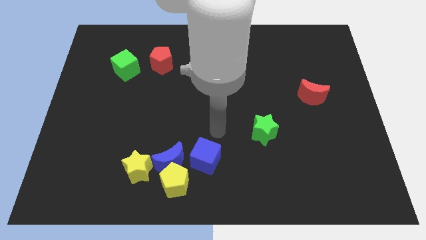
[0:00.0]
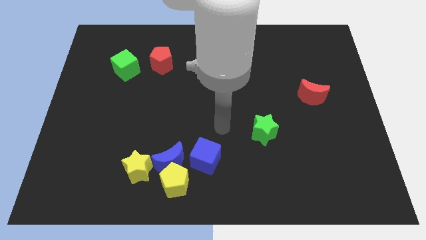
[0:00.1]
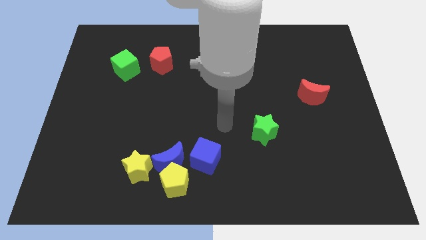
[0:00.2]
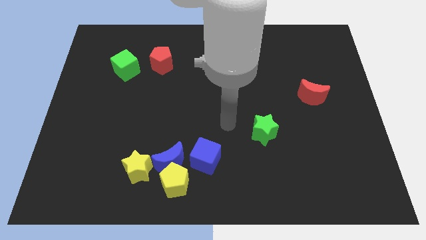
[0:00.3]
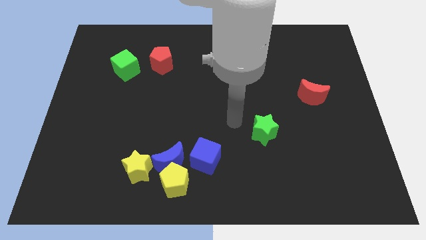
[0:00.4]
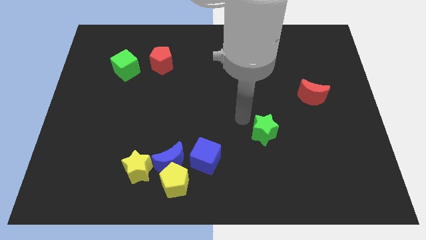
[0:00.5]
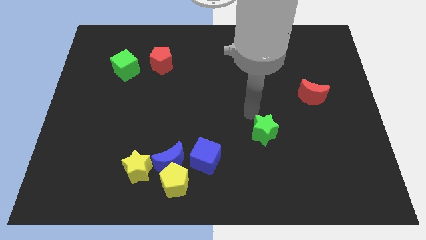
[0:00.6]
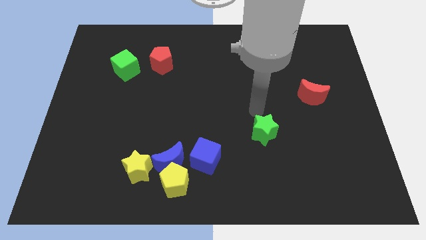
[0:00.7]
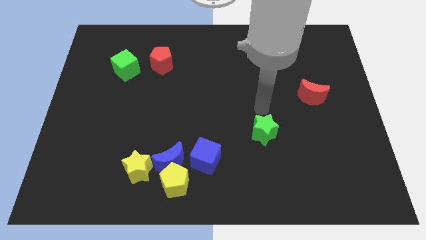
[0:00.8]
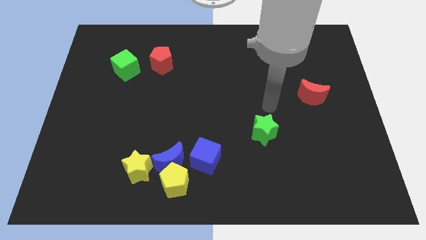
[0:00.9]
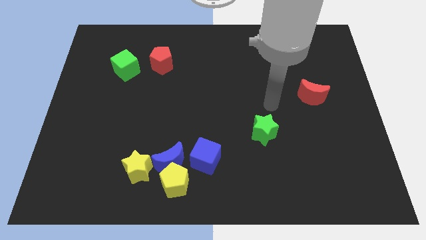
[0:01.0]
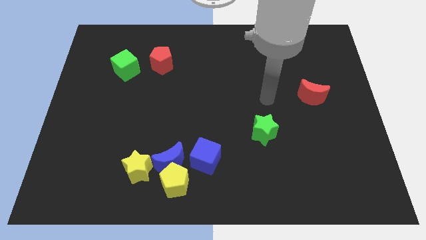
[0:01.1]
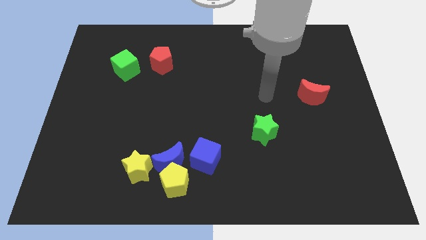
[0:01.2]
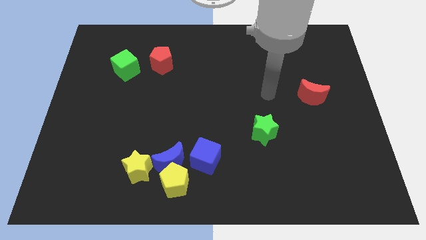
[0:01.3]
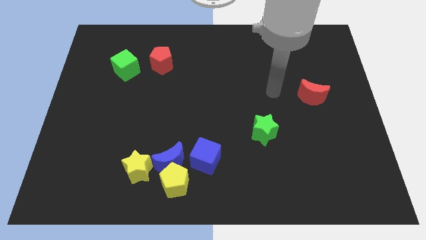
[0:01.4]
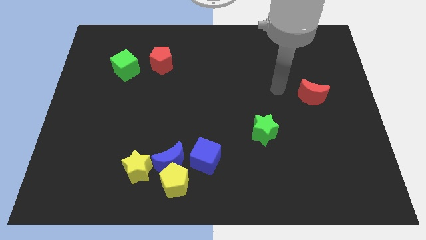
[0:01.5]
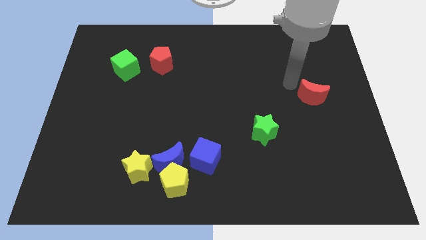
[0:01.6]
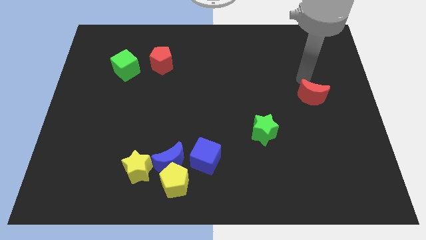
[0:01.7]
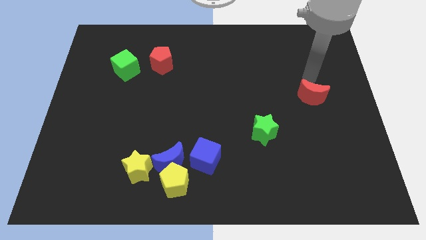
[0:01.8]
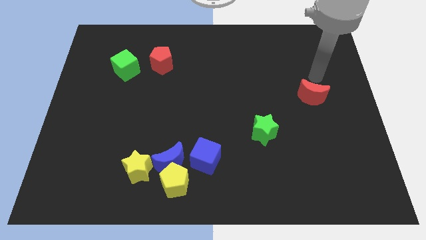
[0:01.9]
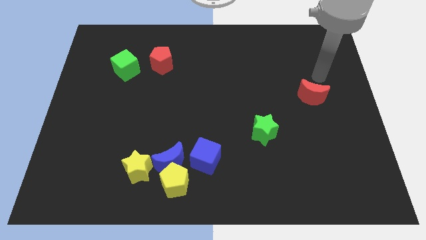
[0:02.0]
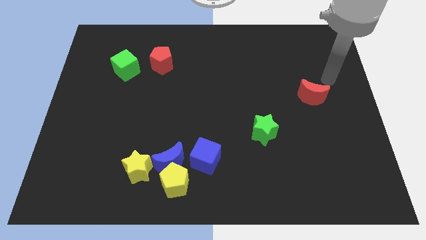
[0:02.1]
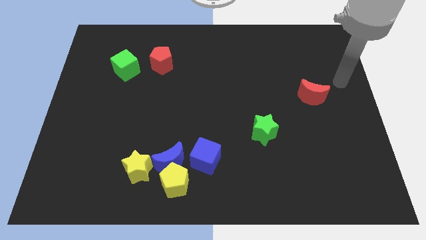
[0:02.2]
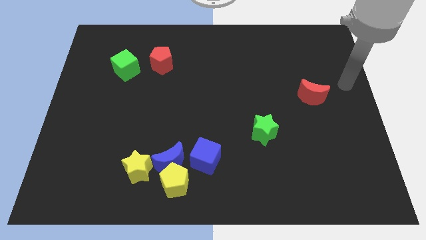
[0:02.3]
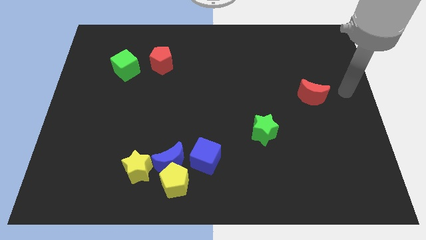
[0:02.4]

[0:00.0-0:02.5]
move your arm towards center right

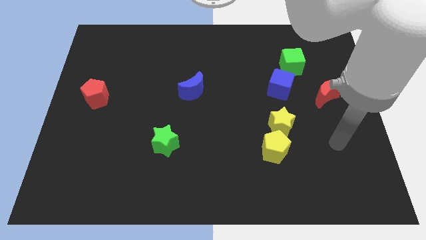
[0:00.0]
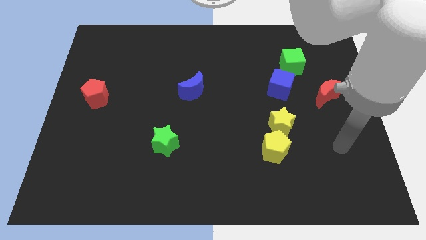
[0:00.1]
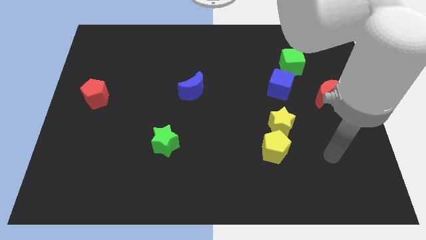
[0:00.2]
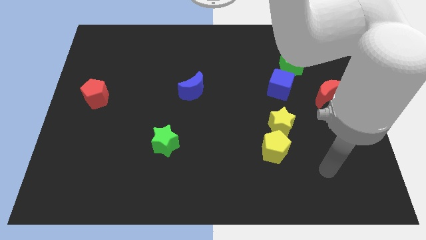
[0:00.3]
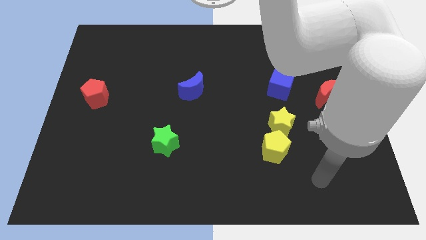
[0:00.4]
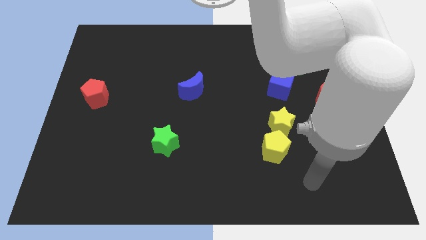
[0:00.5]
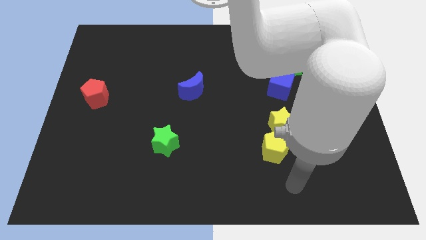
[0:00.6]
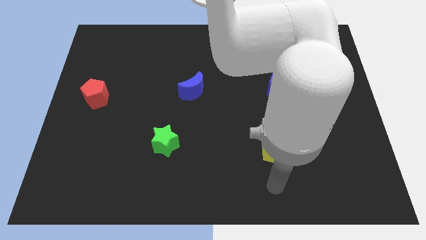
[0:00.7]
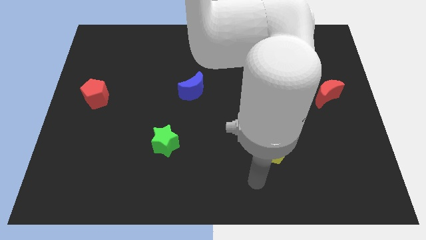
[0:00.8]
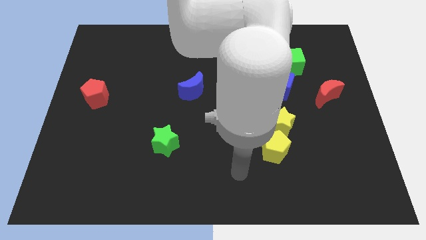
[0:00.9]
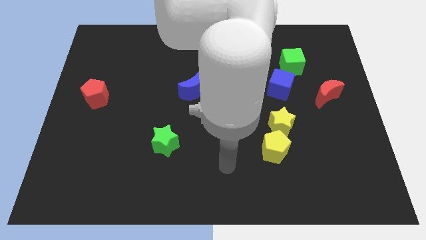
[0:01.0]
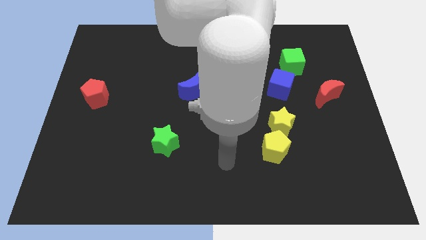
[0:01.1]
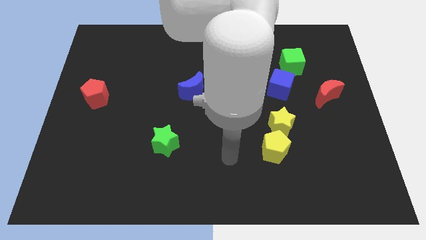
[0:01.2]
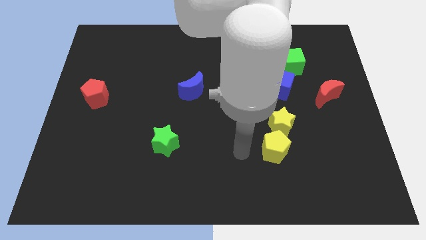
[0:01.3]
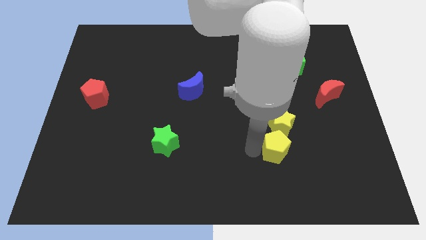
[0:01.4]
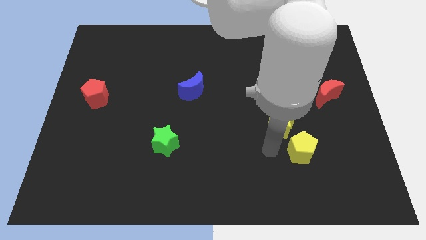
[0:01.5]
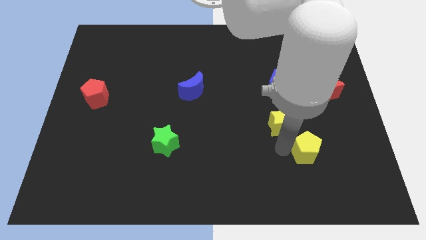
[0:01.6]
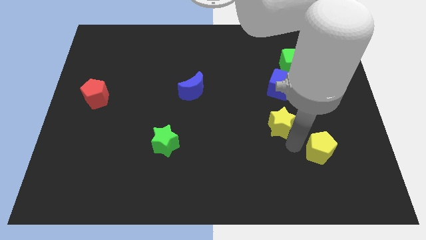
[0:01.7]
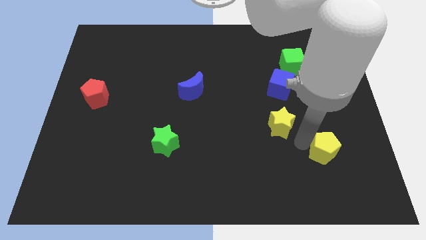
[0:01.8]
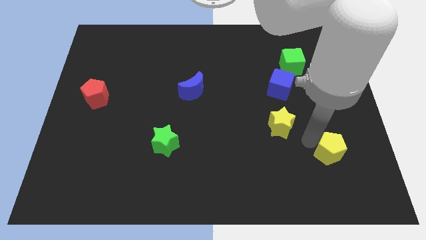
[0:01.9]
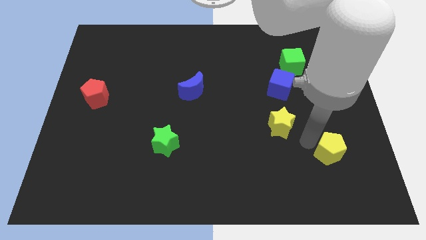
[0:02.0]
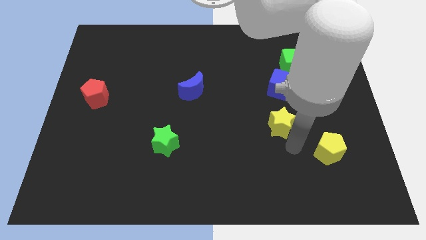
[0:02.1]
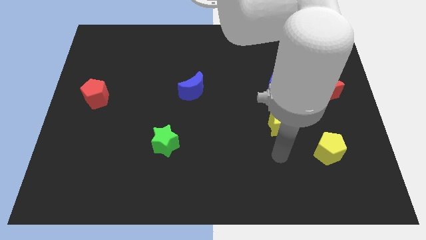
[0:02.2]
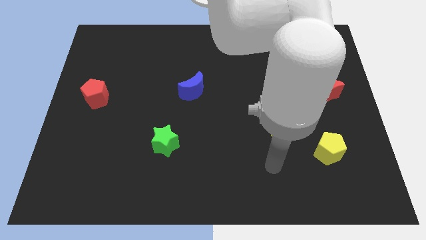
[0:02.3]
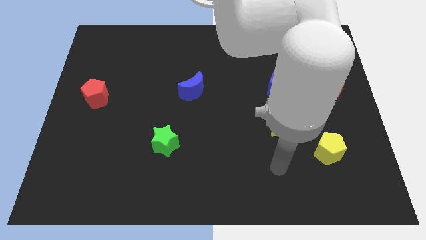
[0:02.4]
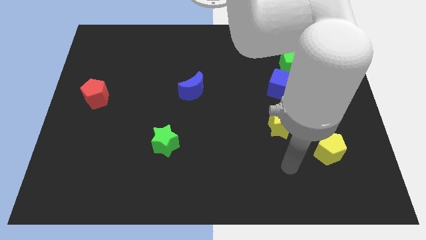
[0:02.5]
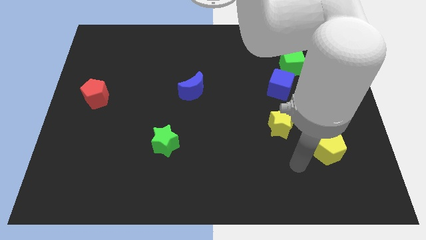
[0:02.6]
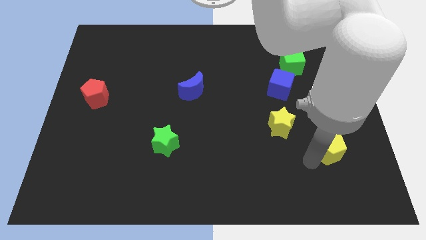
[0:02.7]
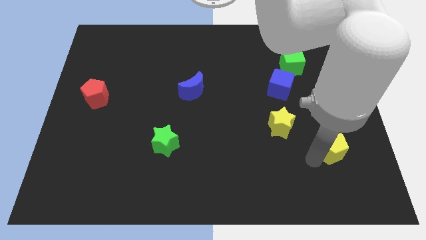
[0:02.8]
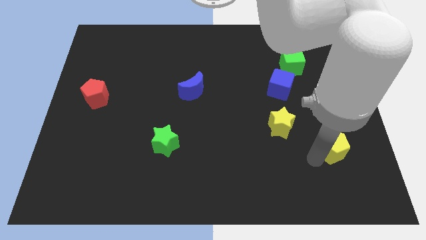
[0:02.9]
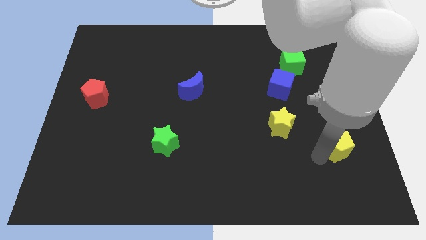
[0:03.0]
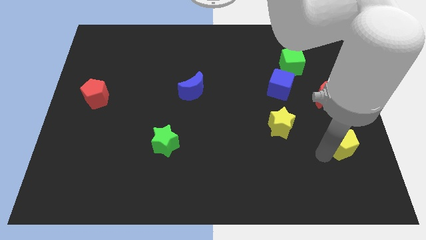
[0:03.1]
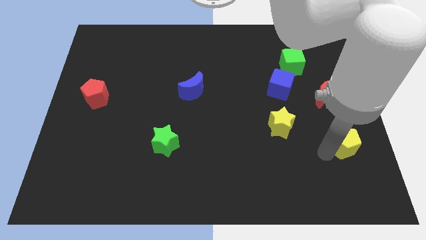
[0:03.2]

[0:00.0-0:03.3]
slide the yellow pentagon away from the bottom side of the yellow star

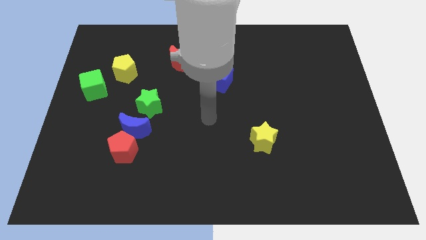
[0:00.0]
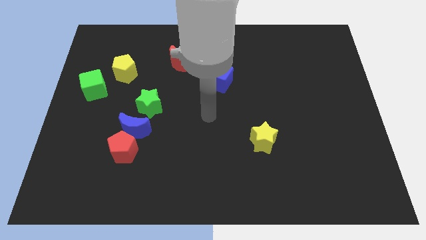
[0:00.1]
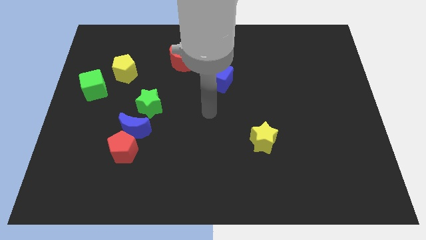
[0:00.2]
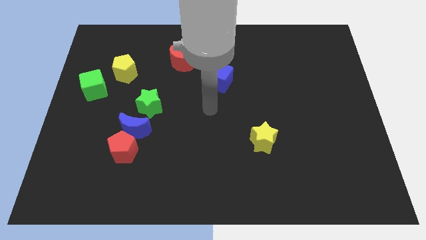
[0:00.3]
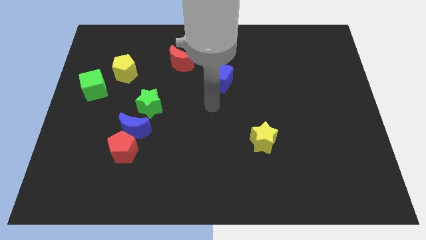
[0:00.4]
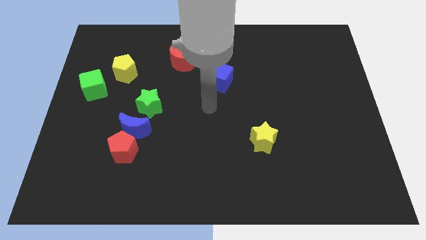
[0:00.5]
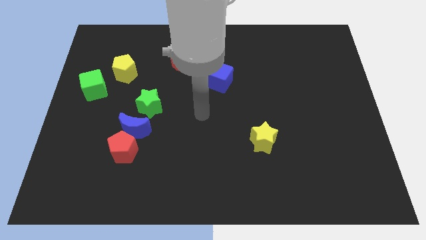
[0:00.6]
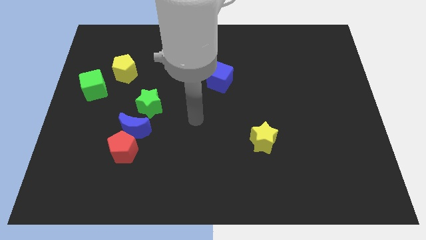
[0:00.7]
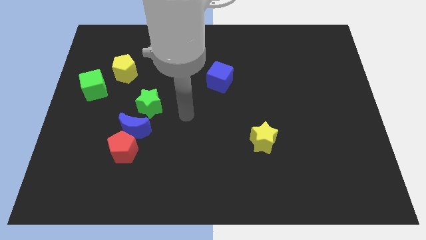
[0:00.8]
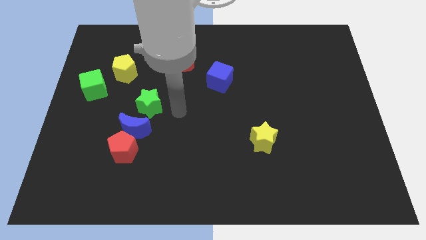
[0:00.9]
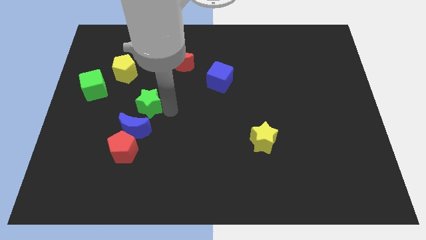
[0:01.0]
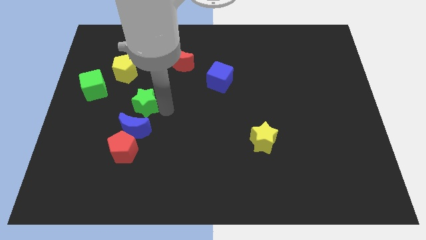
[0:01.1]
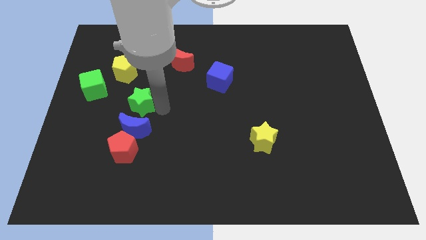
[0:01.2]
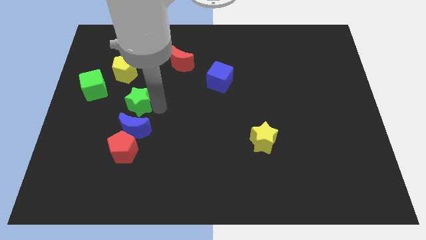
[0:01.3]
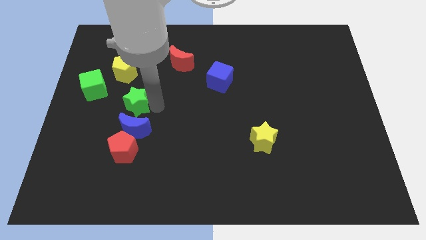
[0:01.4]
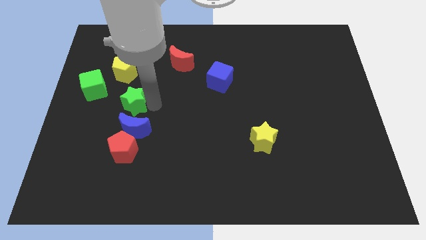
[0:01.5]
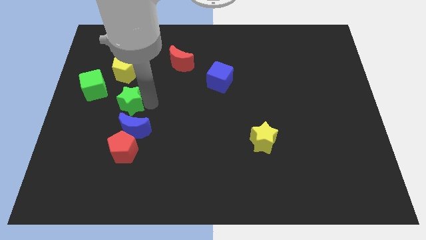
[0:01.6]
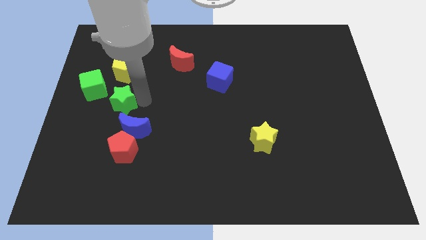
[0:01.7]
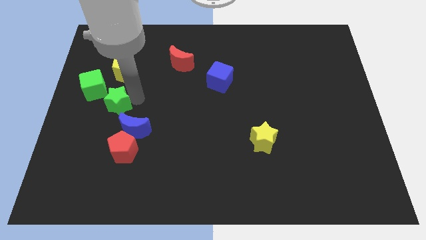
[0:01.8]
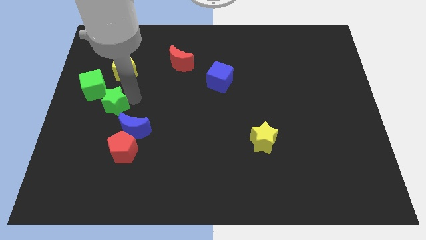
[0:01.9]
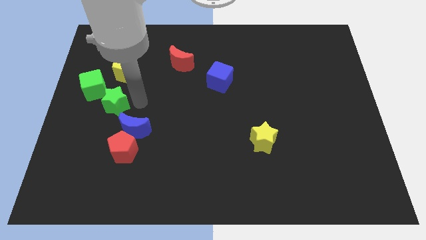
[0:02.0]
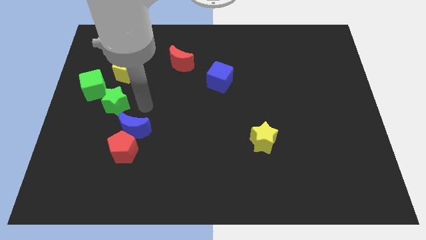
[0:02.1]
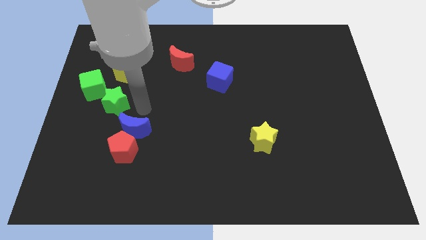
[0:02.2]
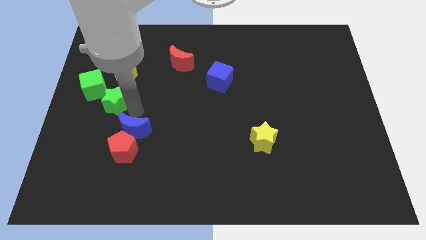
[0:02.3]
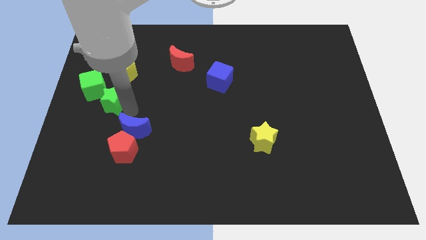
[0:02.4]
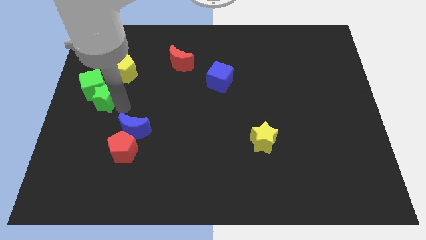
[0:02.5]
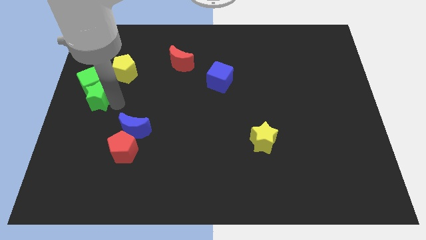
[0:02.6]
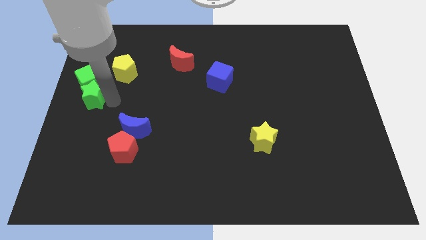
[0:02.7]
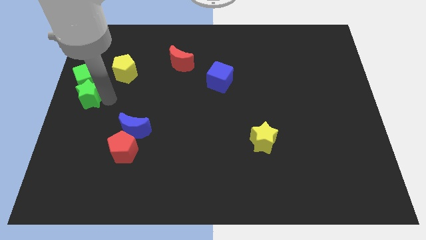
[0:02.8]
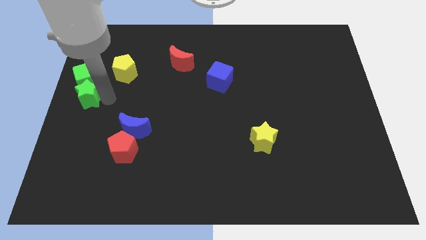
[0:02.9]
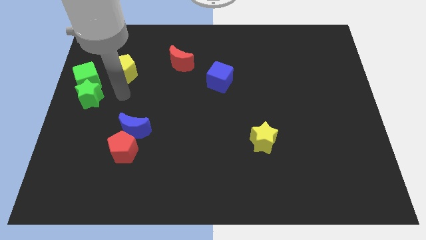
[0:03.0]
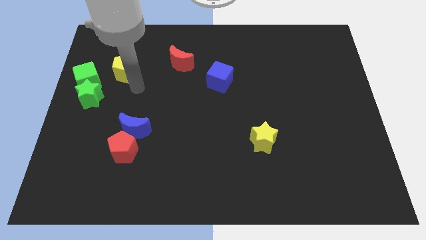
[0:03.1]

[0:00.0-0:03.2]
move the green star towards left center of the board
